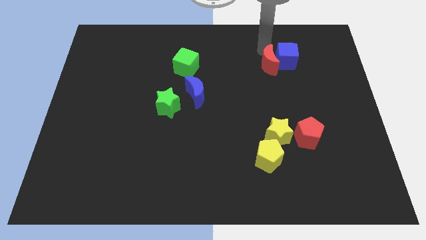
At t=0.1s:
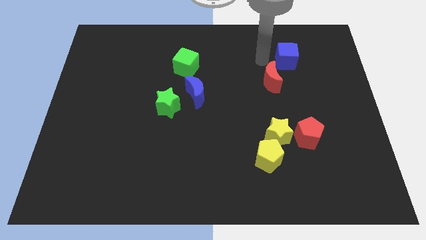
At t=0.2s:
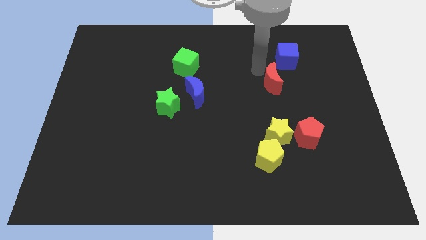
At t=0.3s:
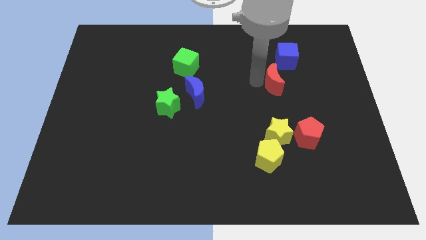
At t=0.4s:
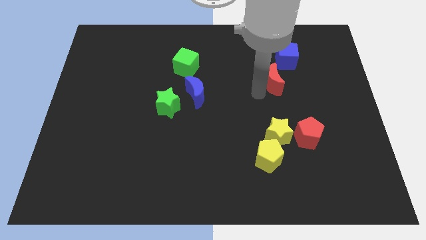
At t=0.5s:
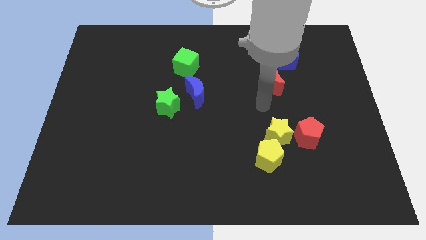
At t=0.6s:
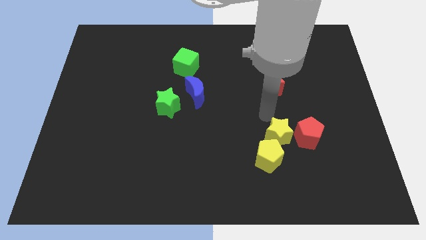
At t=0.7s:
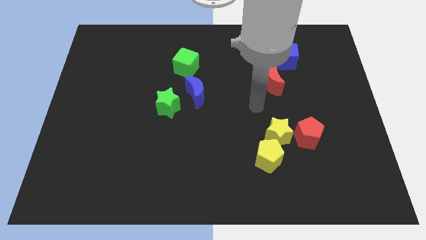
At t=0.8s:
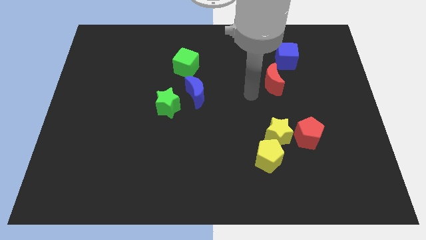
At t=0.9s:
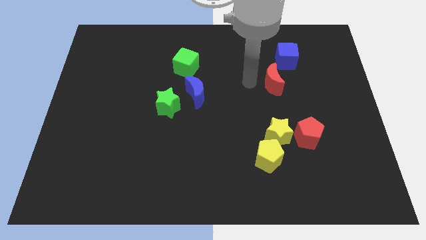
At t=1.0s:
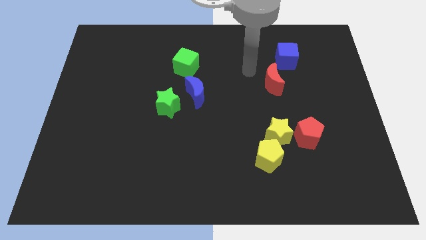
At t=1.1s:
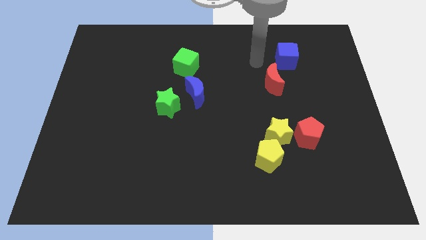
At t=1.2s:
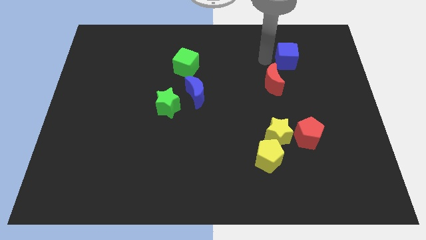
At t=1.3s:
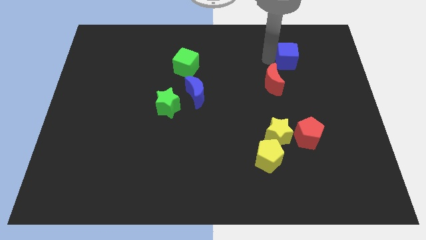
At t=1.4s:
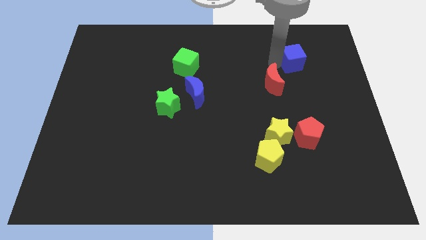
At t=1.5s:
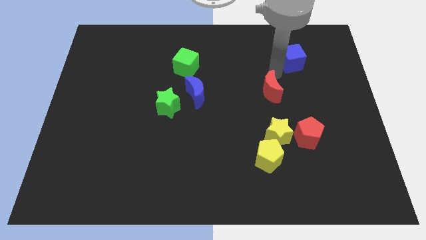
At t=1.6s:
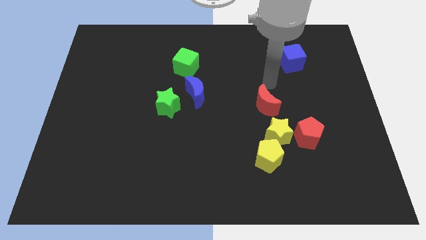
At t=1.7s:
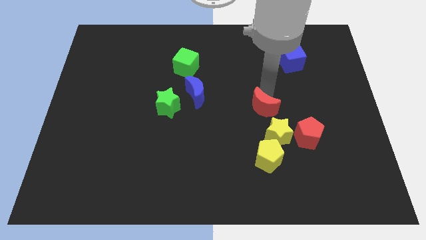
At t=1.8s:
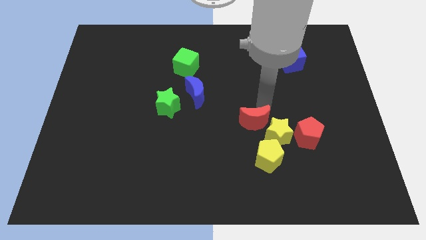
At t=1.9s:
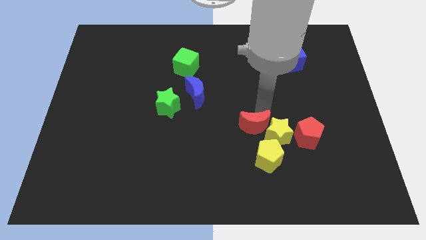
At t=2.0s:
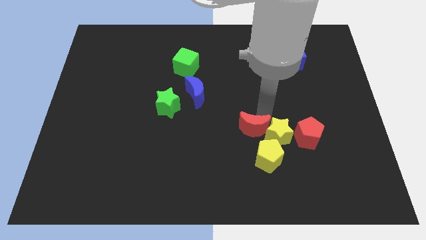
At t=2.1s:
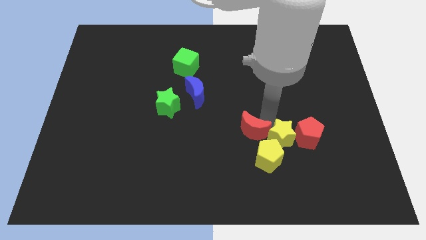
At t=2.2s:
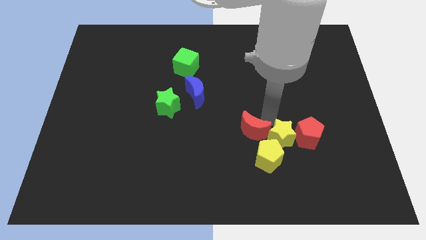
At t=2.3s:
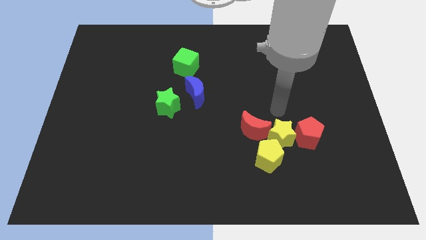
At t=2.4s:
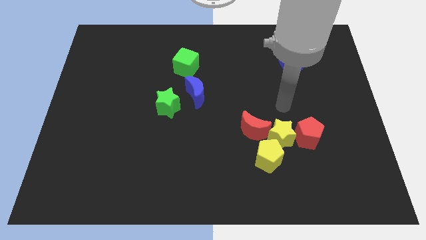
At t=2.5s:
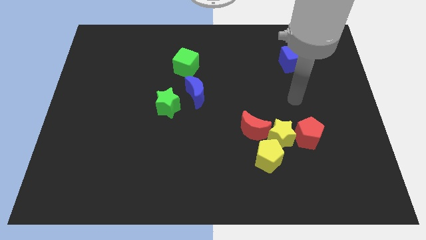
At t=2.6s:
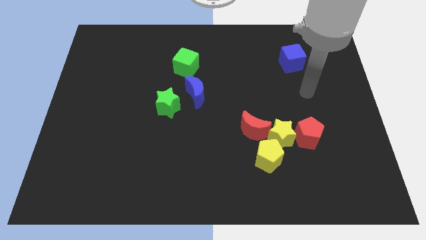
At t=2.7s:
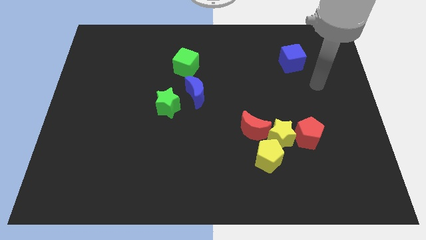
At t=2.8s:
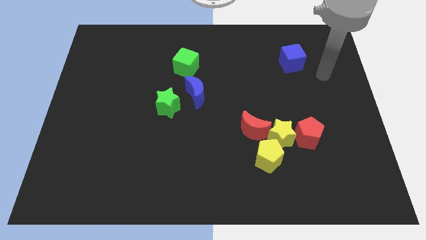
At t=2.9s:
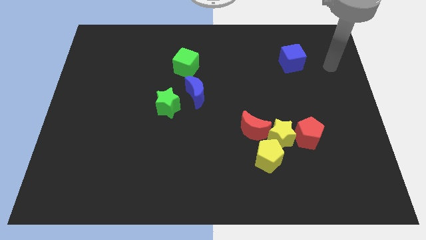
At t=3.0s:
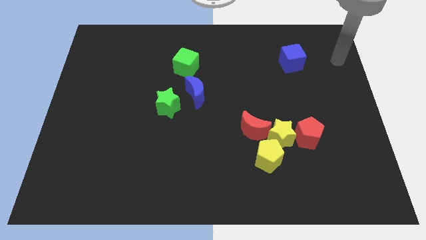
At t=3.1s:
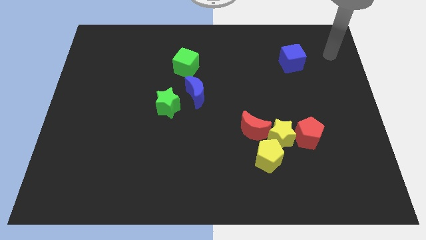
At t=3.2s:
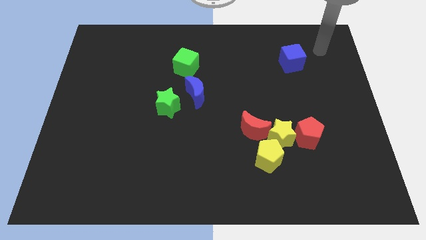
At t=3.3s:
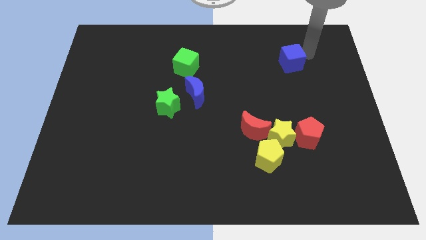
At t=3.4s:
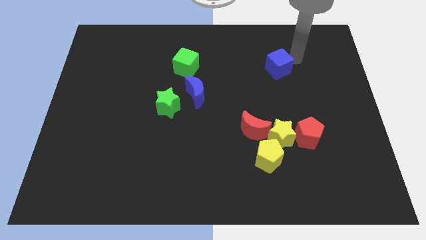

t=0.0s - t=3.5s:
place the red moon to the left of the yellow star

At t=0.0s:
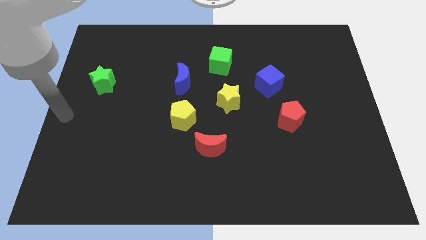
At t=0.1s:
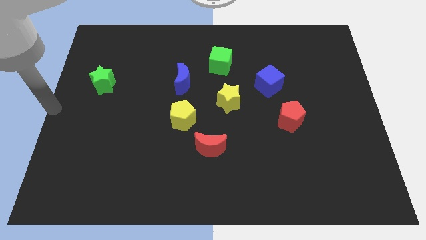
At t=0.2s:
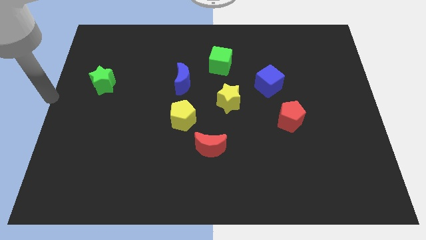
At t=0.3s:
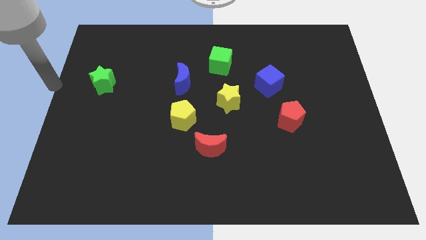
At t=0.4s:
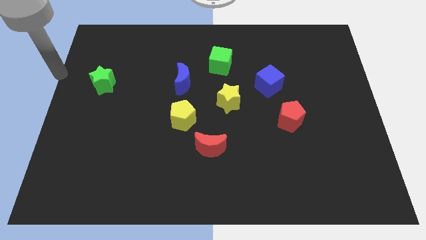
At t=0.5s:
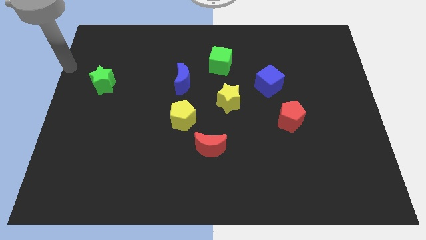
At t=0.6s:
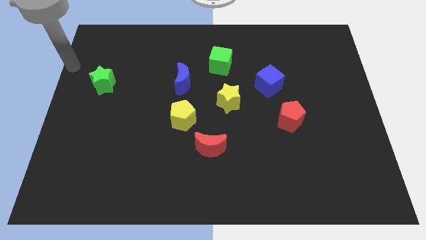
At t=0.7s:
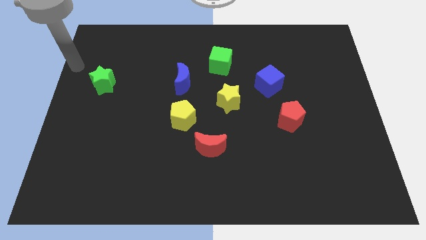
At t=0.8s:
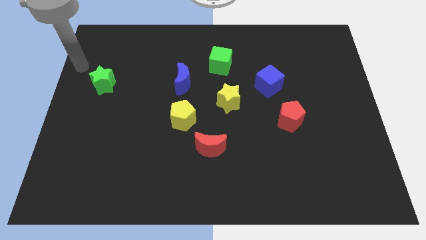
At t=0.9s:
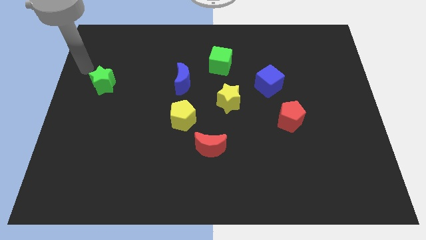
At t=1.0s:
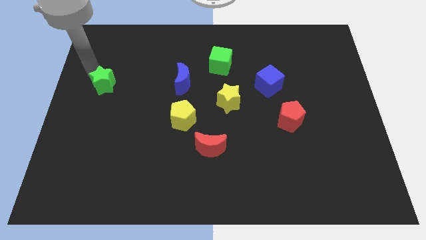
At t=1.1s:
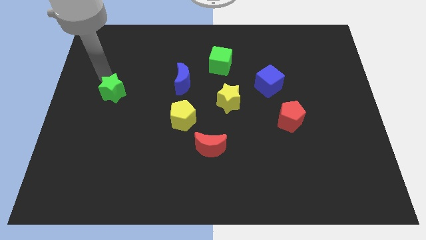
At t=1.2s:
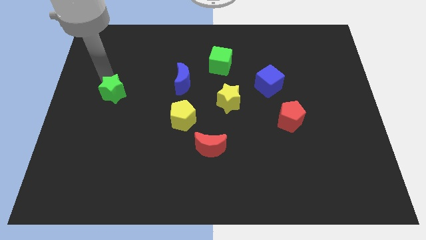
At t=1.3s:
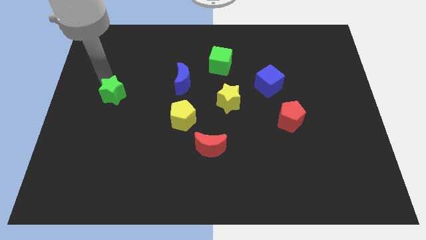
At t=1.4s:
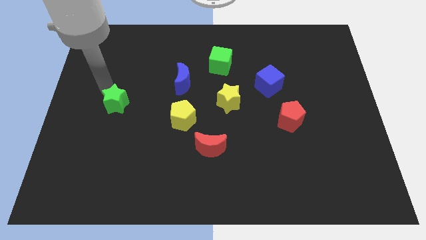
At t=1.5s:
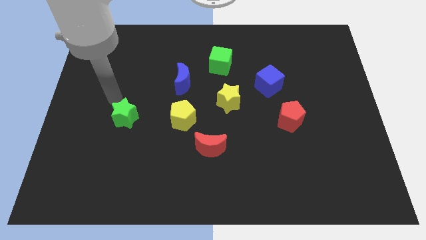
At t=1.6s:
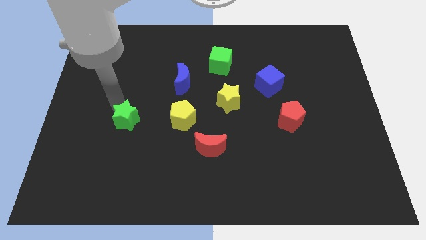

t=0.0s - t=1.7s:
put the green star horizontally left to the yellow pentagon

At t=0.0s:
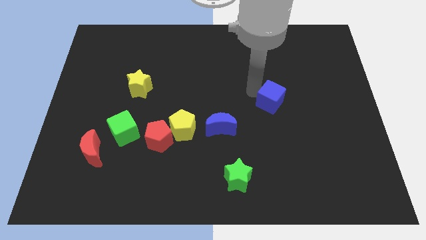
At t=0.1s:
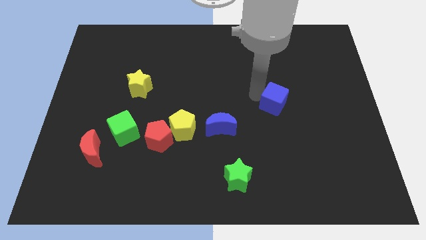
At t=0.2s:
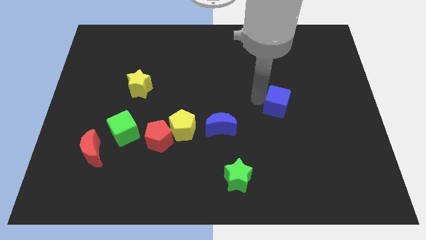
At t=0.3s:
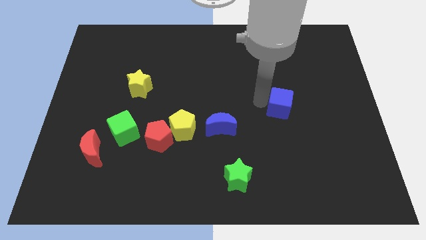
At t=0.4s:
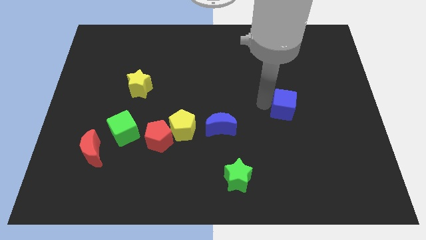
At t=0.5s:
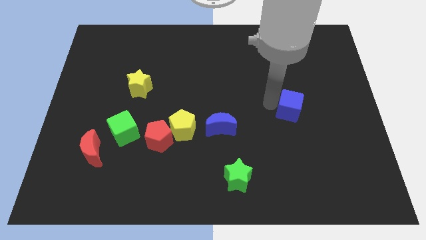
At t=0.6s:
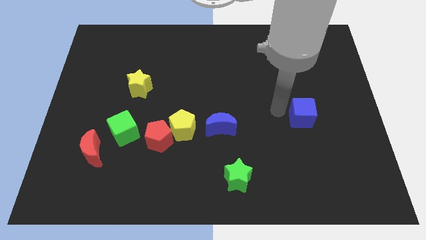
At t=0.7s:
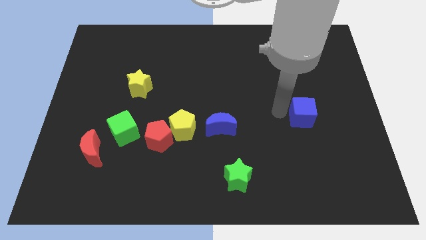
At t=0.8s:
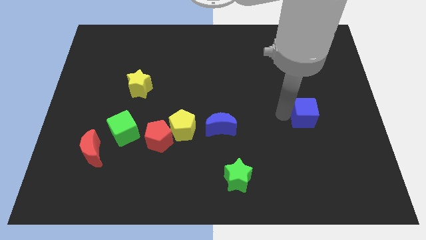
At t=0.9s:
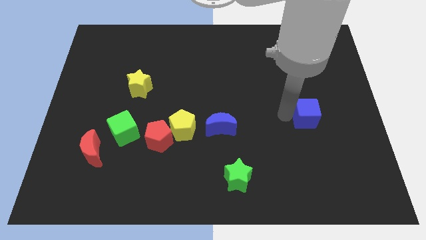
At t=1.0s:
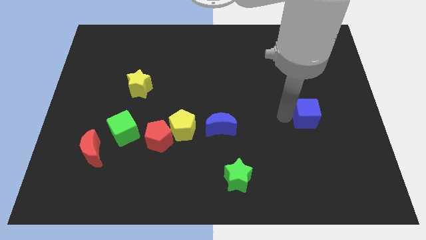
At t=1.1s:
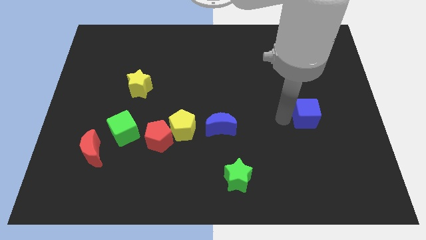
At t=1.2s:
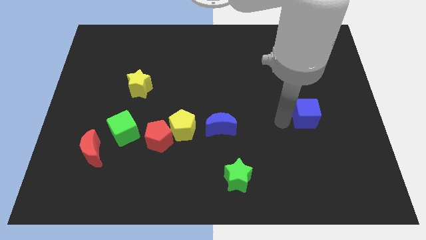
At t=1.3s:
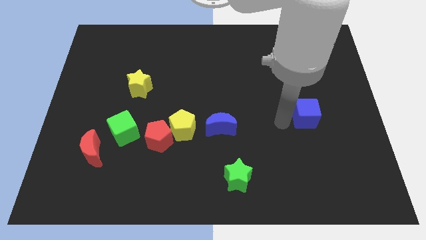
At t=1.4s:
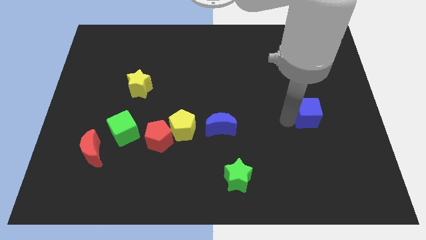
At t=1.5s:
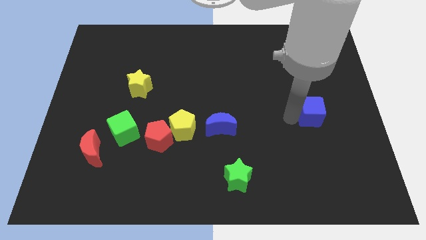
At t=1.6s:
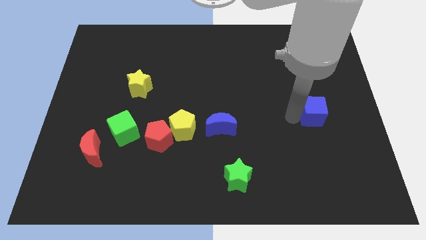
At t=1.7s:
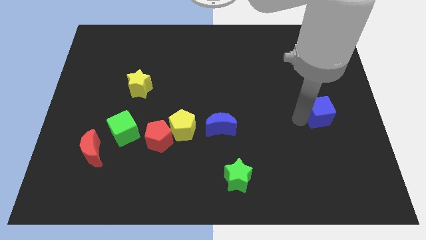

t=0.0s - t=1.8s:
drag the blue cube towards the right center of the board

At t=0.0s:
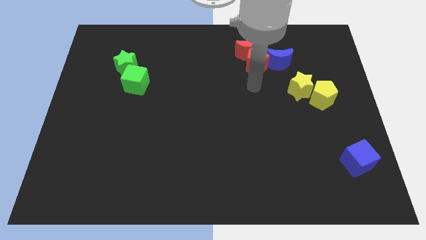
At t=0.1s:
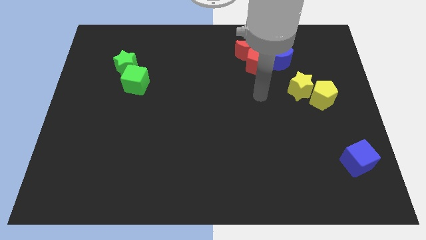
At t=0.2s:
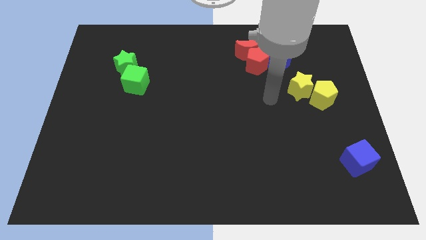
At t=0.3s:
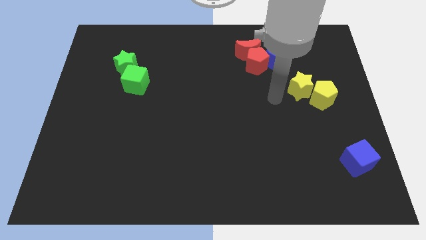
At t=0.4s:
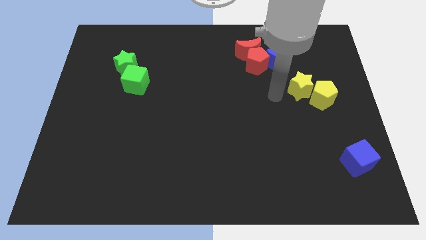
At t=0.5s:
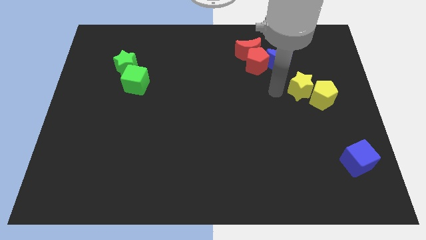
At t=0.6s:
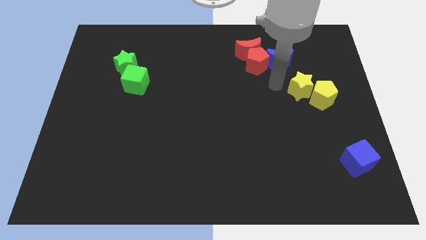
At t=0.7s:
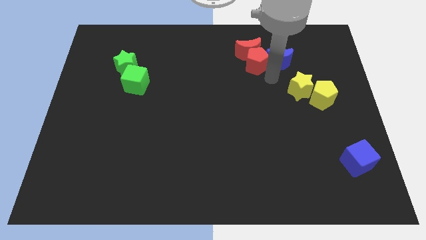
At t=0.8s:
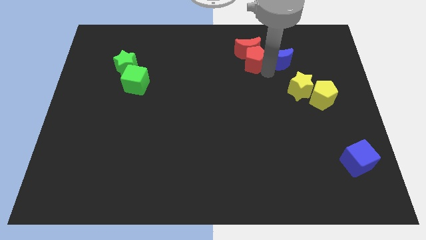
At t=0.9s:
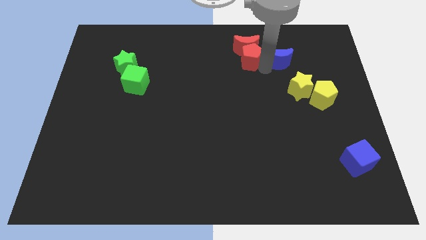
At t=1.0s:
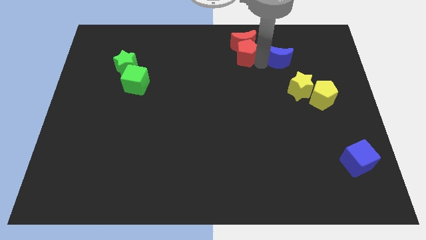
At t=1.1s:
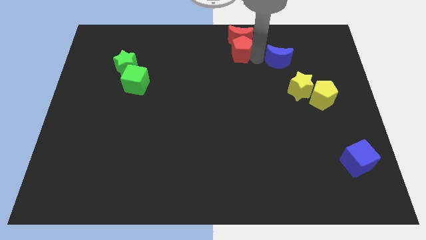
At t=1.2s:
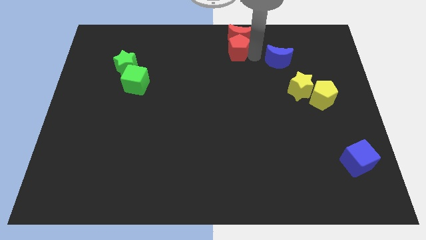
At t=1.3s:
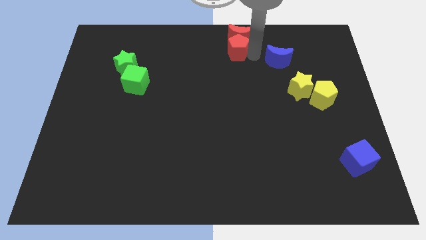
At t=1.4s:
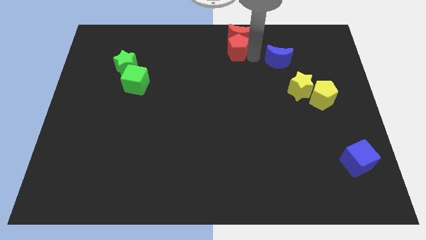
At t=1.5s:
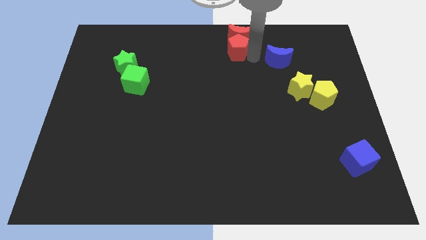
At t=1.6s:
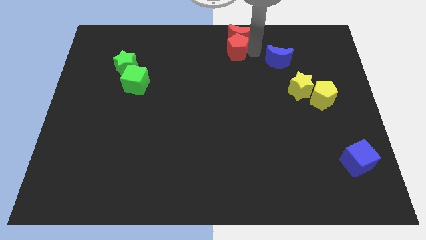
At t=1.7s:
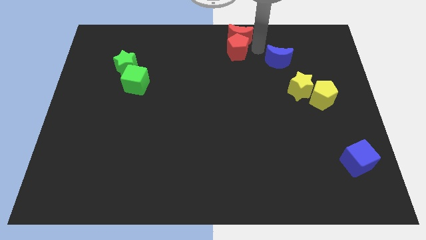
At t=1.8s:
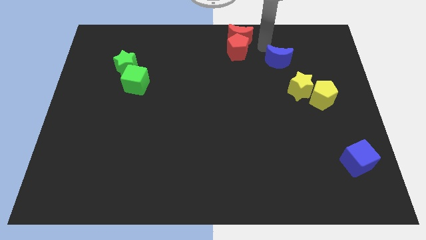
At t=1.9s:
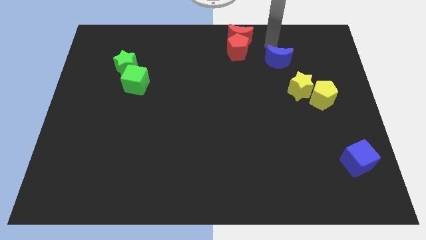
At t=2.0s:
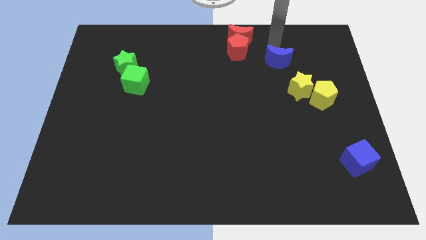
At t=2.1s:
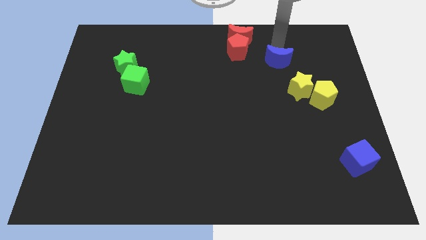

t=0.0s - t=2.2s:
push the red blocks towards top center
